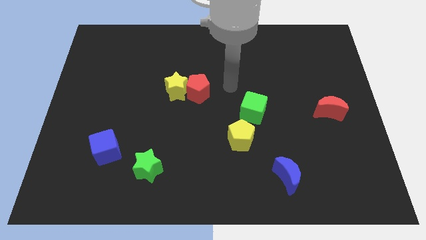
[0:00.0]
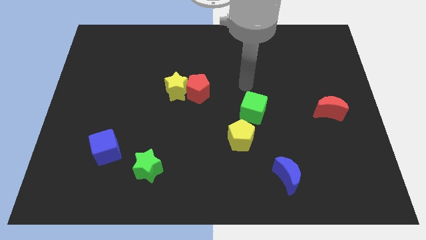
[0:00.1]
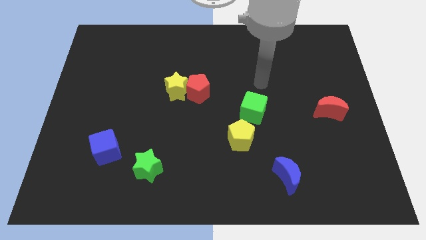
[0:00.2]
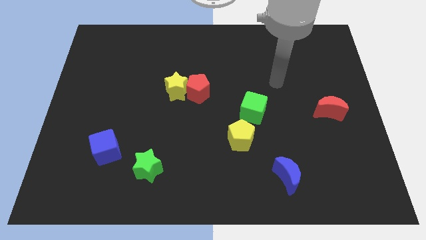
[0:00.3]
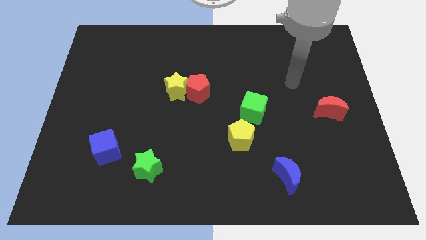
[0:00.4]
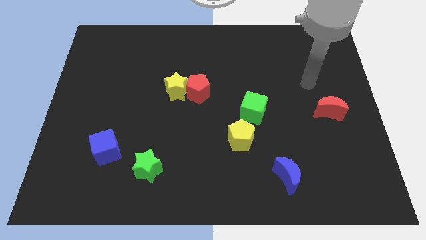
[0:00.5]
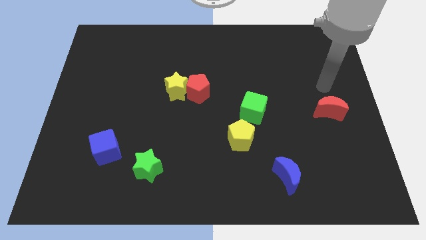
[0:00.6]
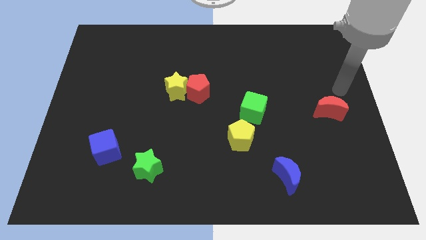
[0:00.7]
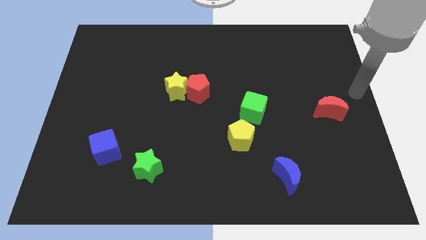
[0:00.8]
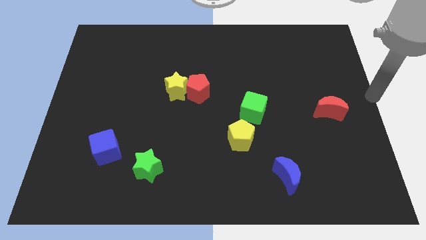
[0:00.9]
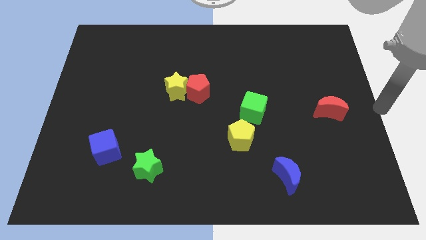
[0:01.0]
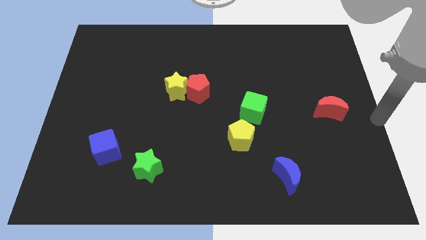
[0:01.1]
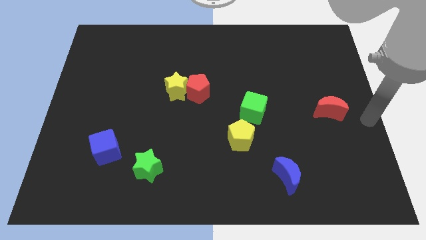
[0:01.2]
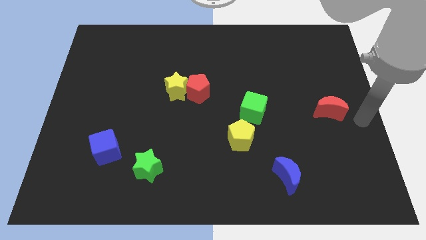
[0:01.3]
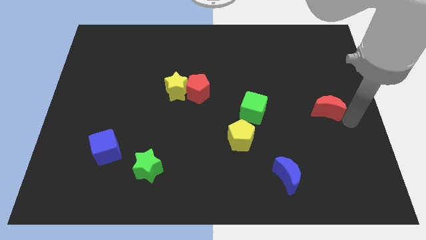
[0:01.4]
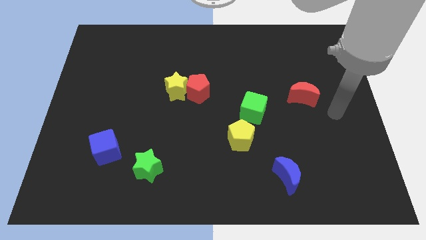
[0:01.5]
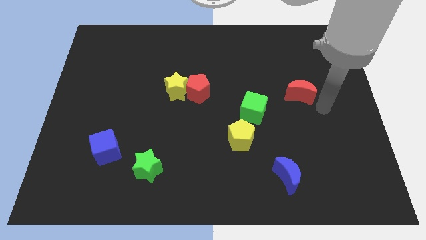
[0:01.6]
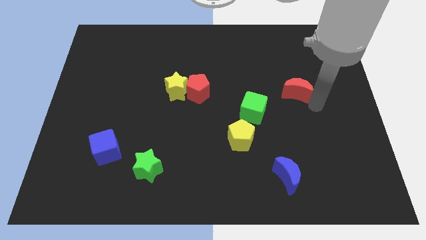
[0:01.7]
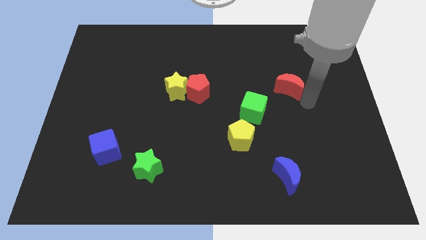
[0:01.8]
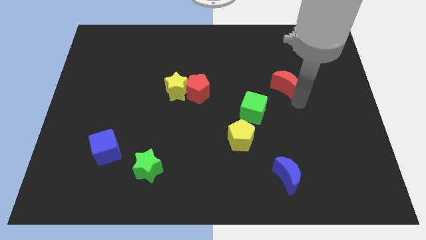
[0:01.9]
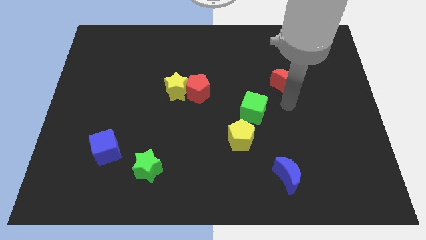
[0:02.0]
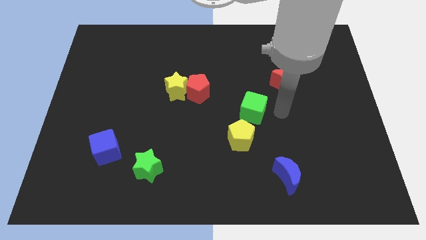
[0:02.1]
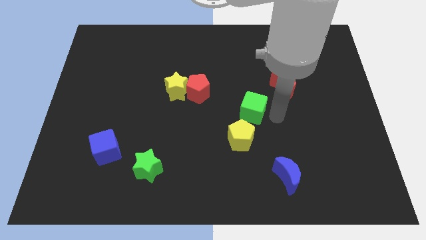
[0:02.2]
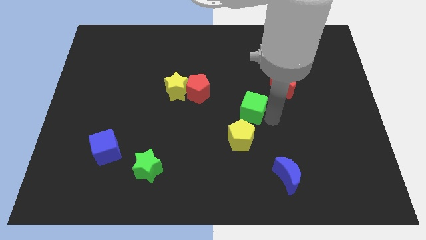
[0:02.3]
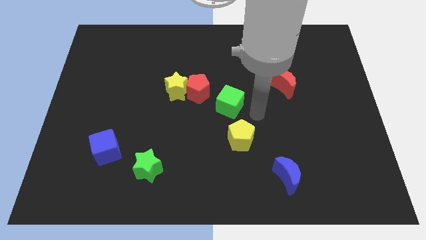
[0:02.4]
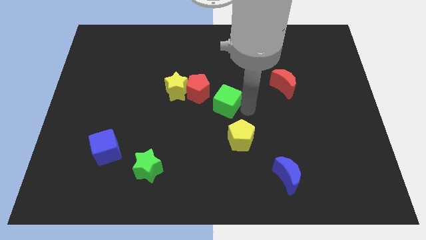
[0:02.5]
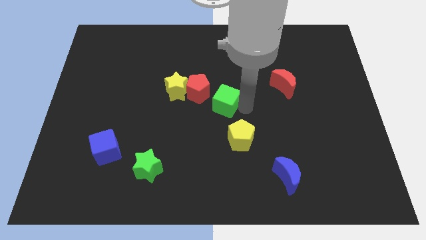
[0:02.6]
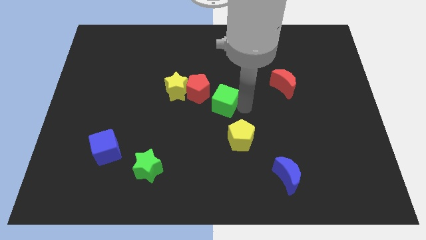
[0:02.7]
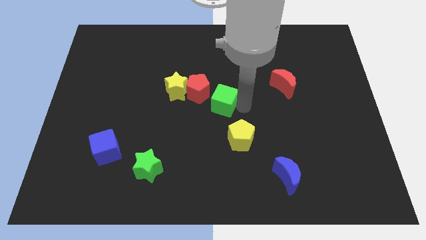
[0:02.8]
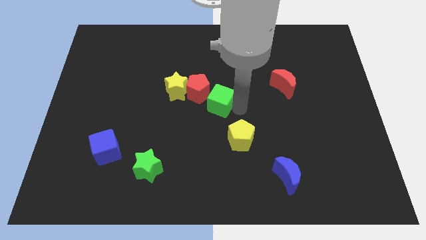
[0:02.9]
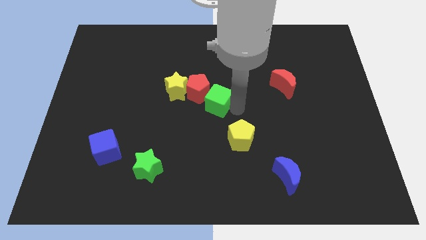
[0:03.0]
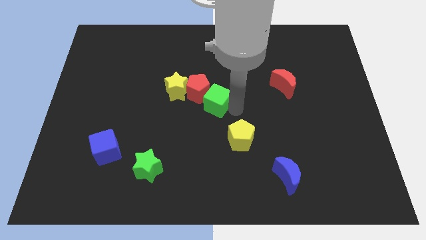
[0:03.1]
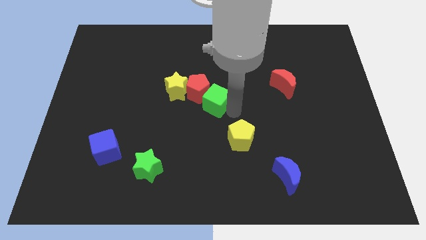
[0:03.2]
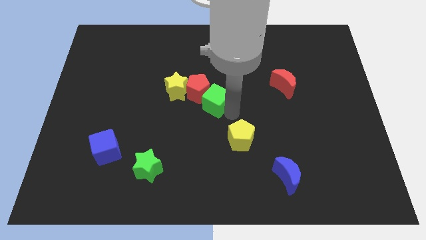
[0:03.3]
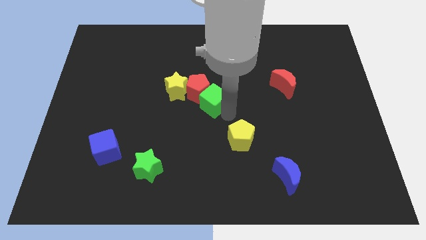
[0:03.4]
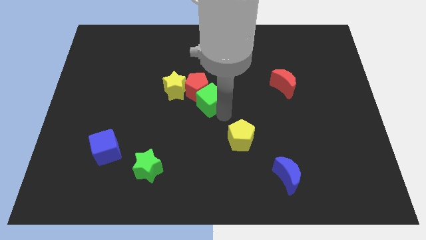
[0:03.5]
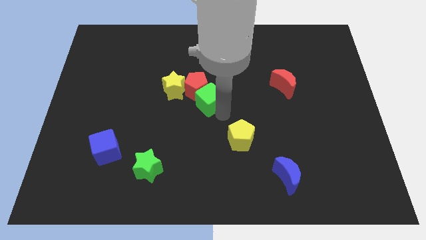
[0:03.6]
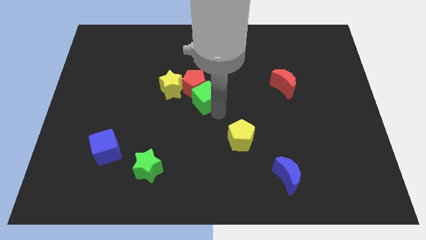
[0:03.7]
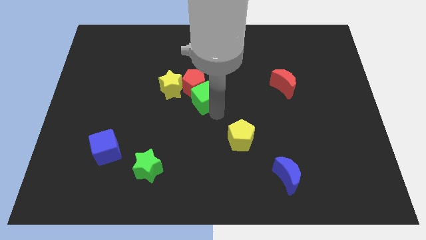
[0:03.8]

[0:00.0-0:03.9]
slightly push the red moon diagonally up

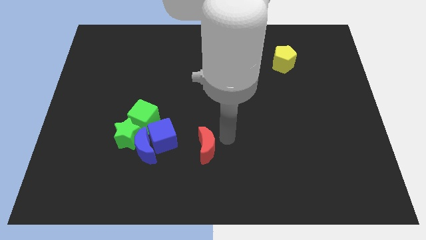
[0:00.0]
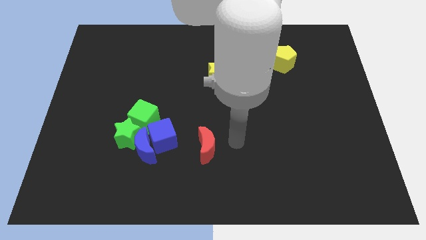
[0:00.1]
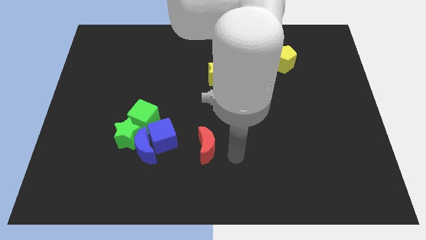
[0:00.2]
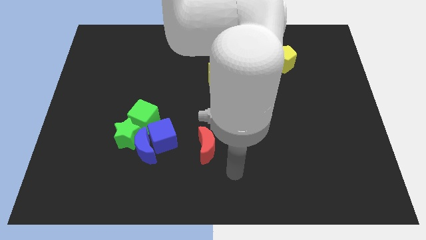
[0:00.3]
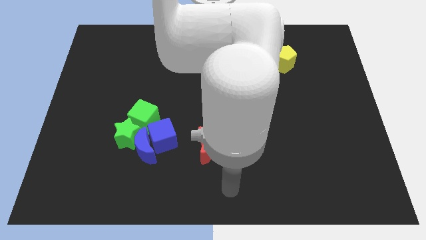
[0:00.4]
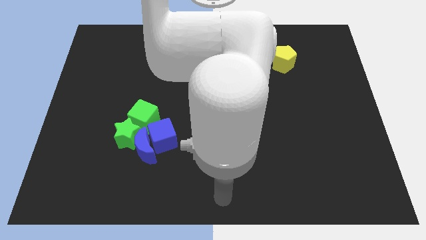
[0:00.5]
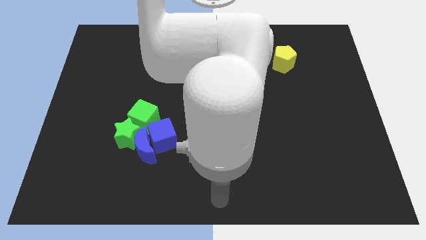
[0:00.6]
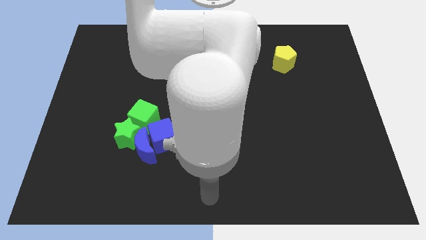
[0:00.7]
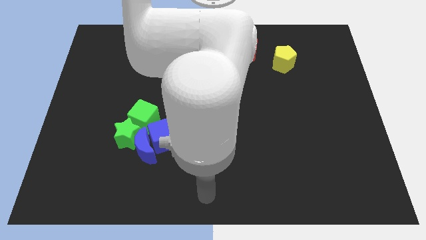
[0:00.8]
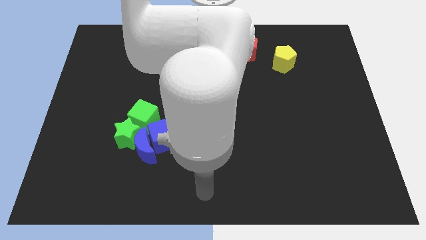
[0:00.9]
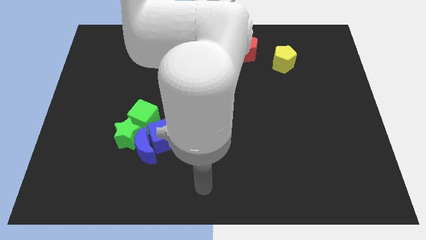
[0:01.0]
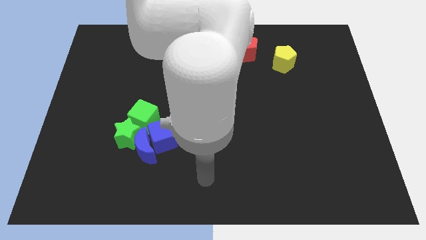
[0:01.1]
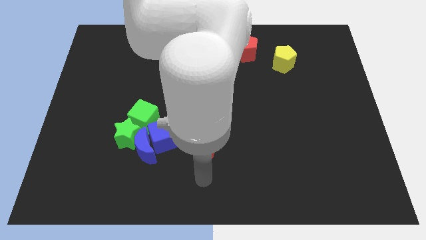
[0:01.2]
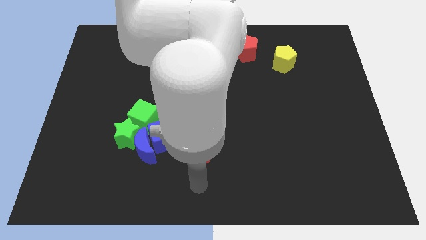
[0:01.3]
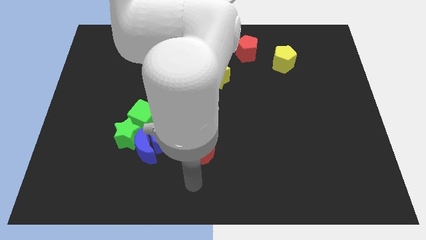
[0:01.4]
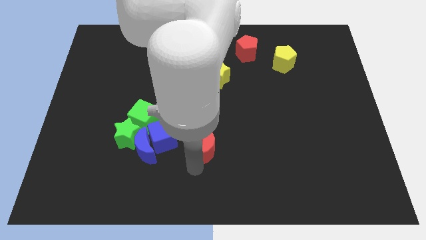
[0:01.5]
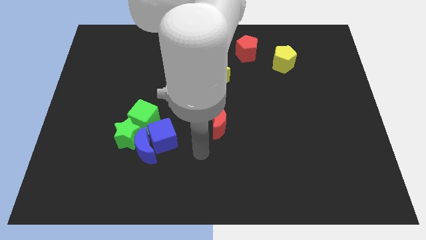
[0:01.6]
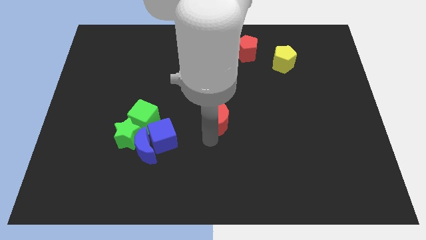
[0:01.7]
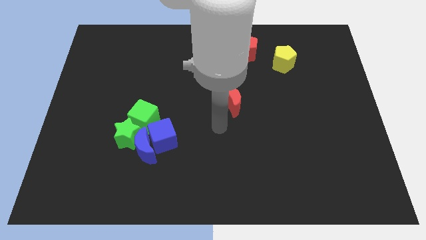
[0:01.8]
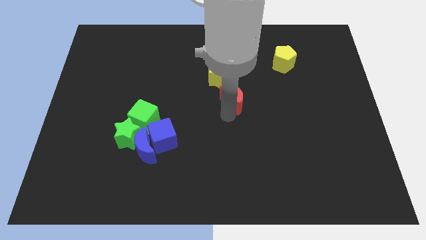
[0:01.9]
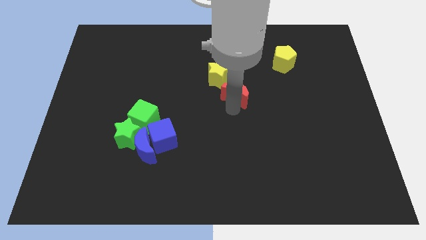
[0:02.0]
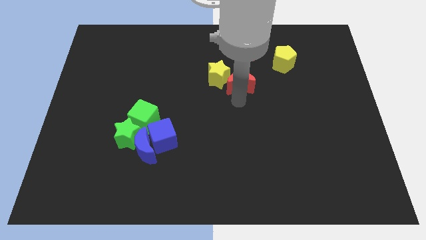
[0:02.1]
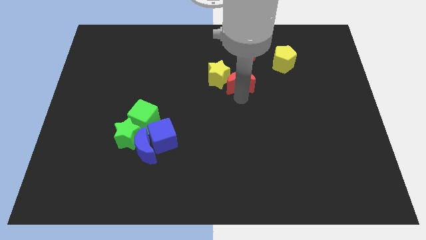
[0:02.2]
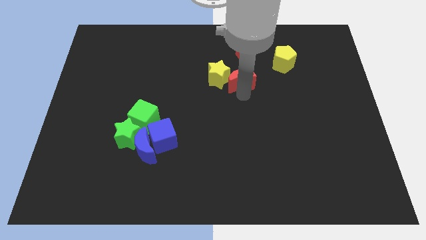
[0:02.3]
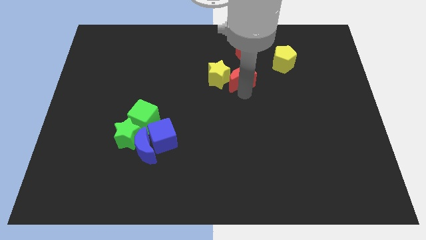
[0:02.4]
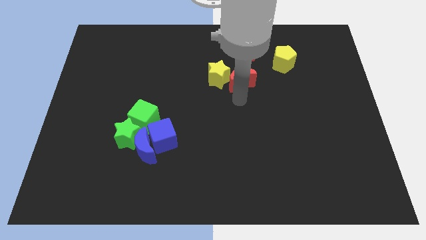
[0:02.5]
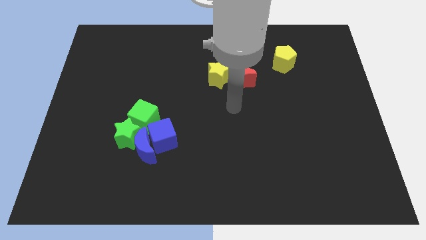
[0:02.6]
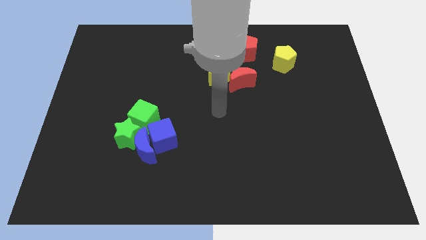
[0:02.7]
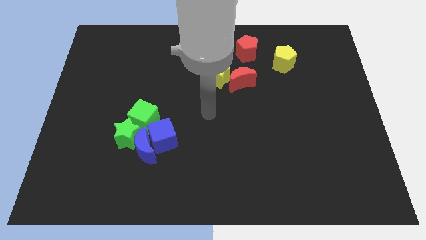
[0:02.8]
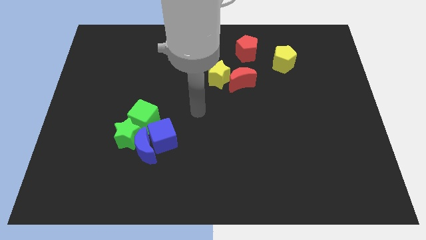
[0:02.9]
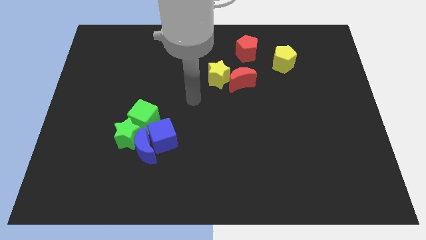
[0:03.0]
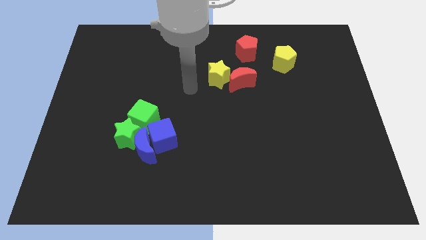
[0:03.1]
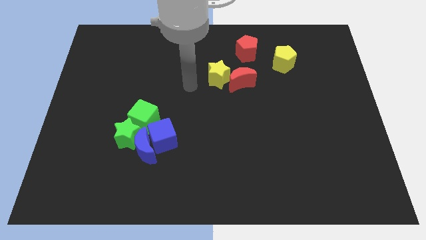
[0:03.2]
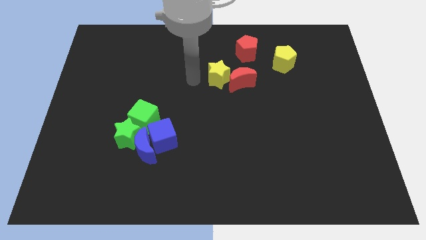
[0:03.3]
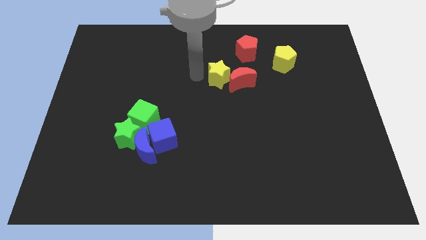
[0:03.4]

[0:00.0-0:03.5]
move red crescent to the right of yellow star

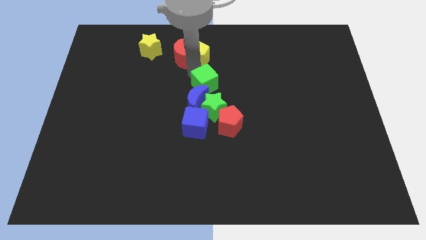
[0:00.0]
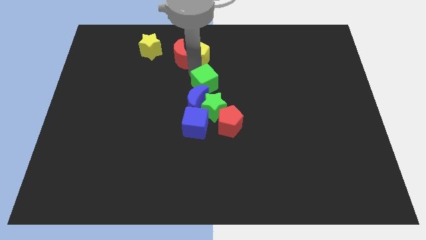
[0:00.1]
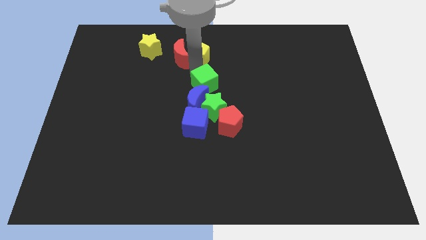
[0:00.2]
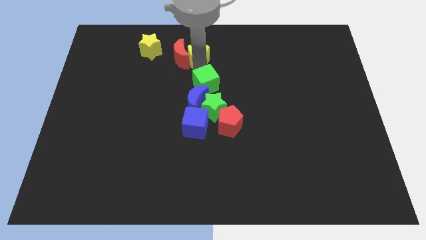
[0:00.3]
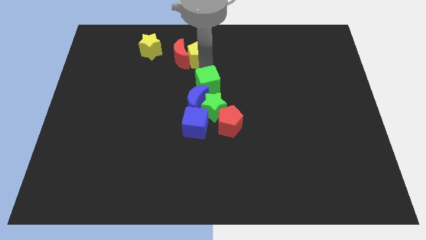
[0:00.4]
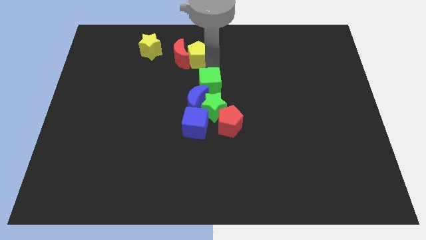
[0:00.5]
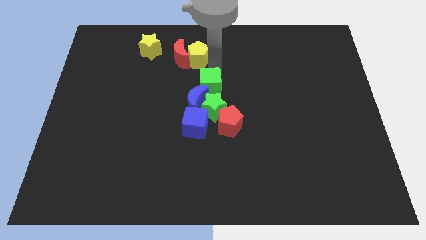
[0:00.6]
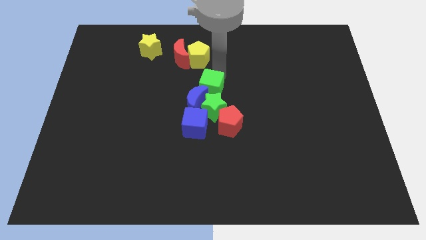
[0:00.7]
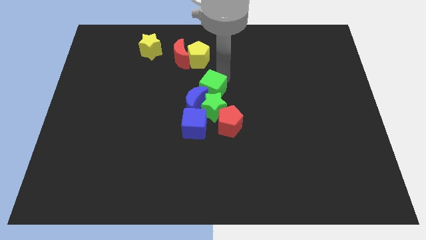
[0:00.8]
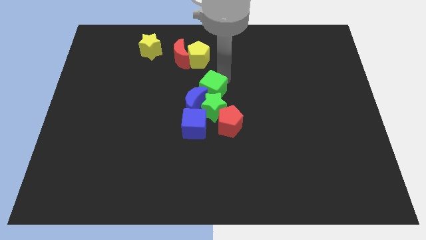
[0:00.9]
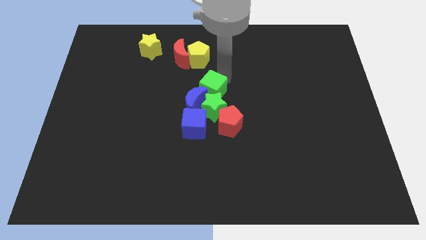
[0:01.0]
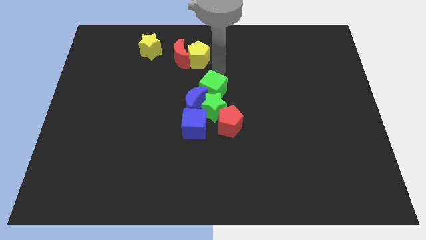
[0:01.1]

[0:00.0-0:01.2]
move the green cube into the blue moon

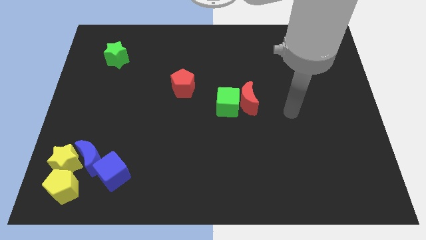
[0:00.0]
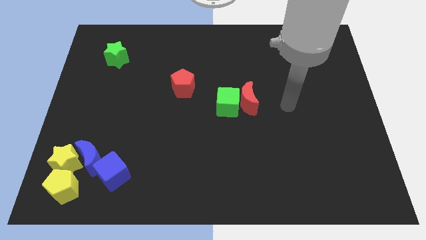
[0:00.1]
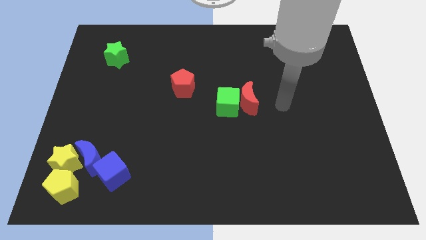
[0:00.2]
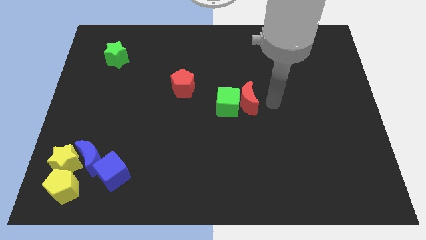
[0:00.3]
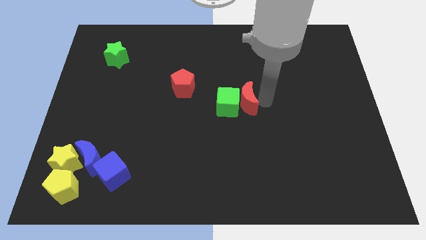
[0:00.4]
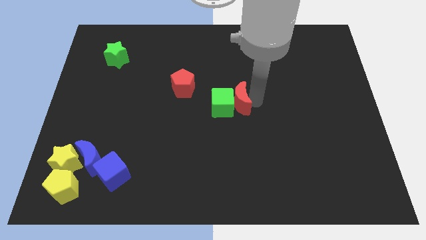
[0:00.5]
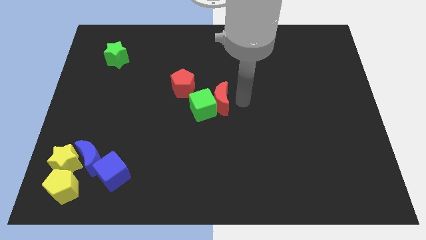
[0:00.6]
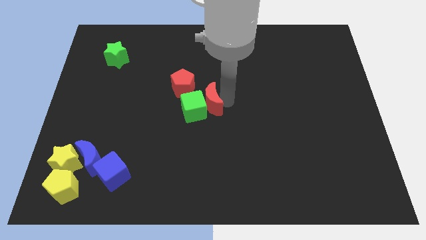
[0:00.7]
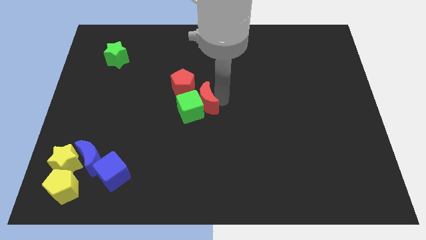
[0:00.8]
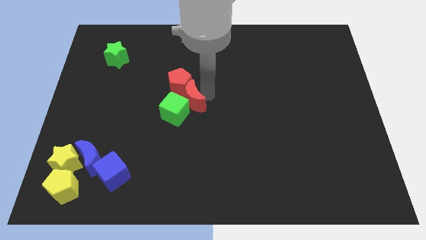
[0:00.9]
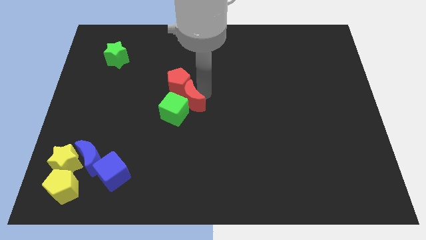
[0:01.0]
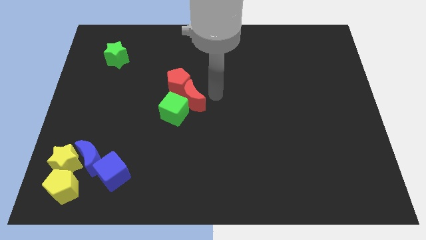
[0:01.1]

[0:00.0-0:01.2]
push the red crescent along with green cube close to the red pentagon
